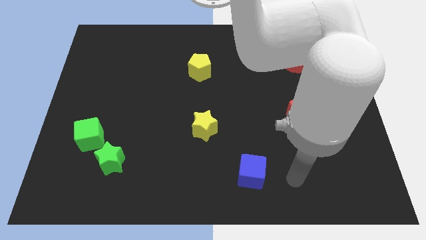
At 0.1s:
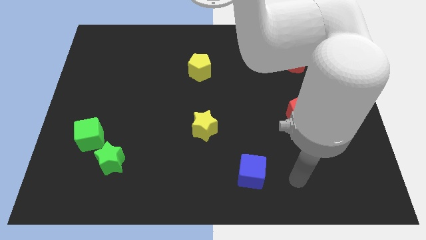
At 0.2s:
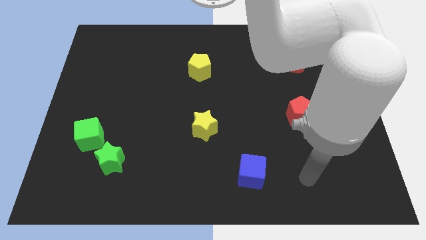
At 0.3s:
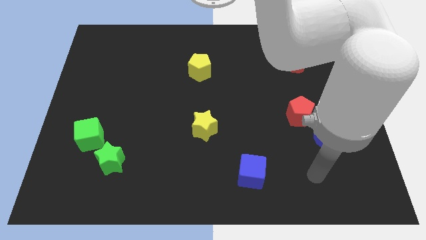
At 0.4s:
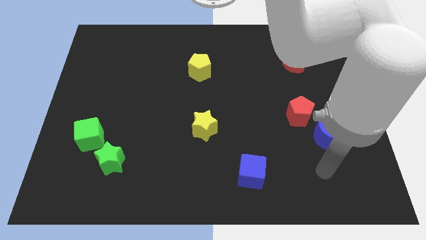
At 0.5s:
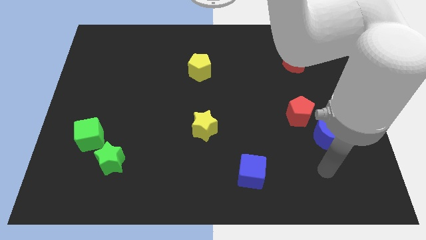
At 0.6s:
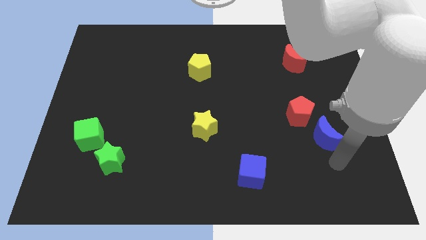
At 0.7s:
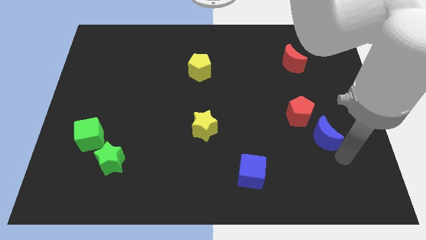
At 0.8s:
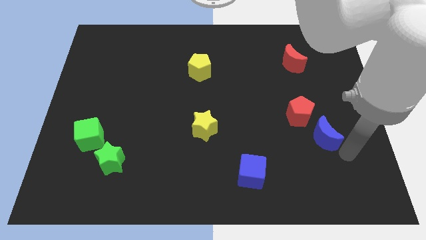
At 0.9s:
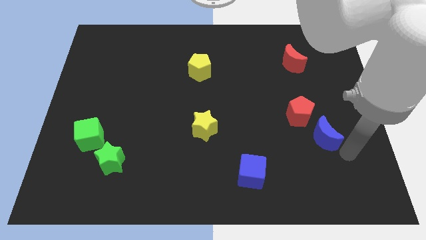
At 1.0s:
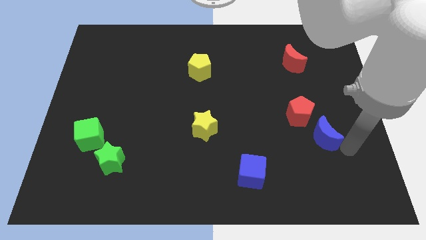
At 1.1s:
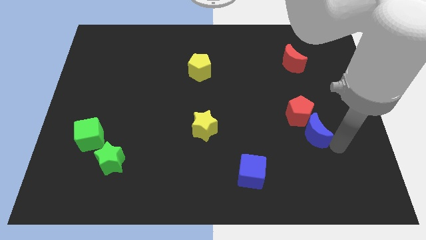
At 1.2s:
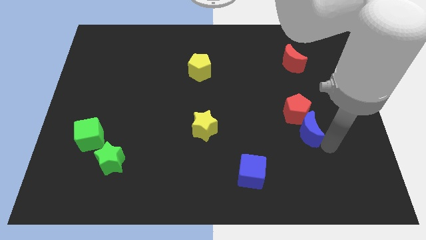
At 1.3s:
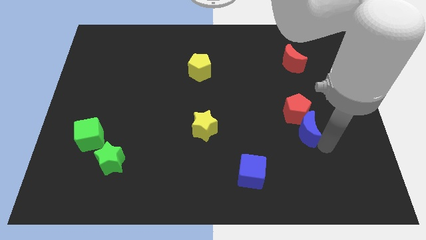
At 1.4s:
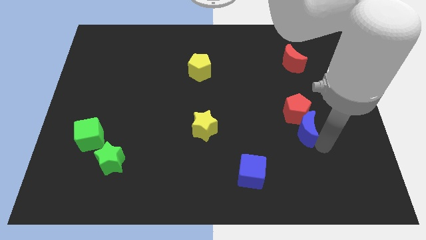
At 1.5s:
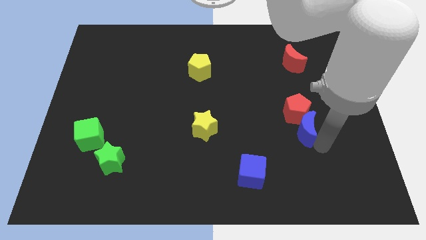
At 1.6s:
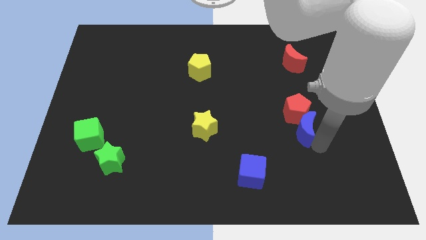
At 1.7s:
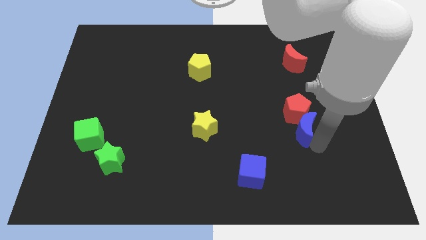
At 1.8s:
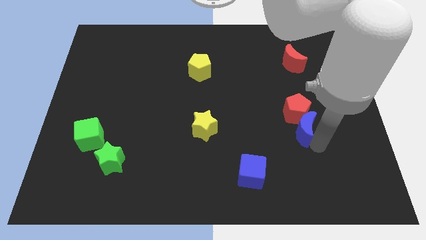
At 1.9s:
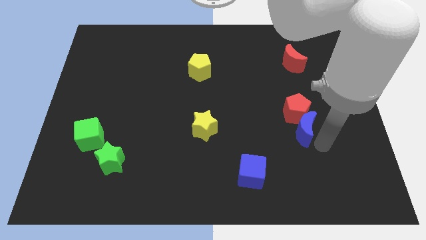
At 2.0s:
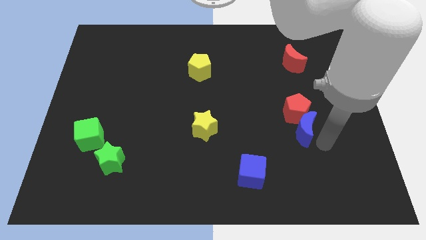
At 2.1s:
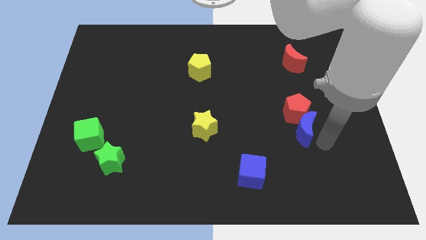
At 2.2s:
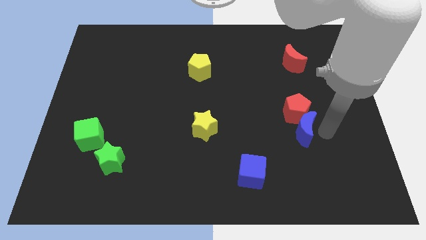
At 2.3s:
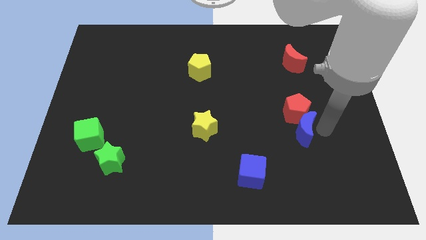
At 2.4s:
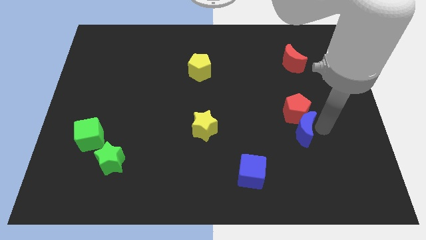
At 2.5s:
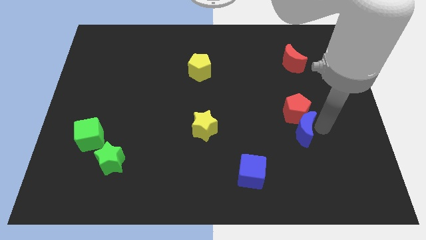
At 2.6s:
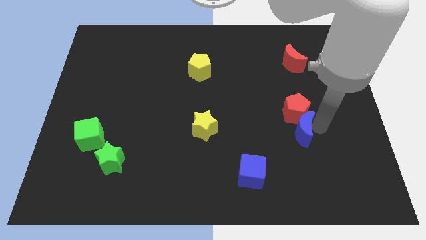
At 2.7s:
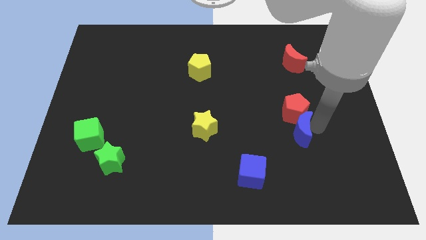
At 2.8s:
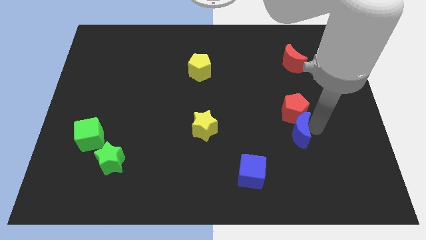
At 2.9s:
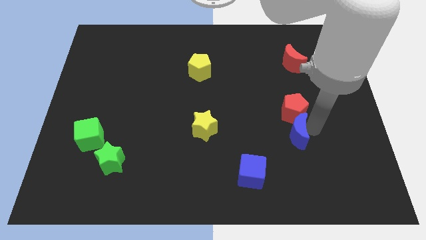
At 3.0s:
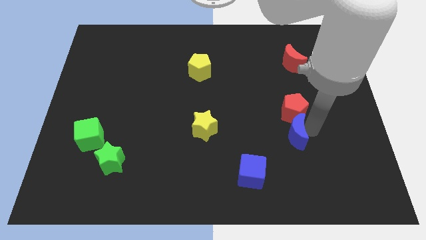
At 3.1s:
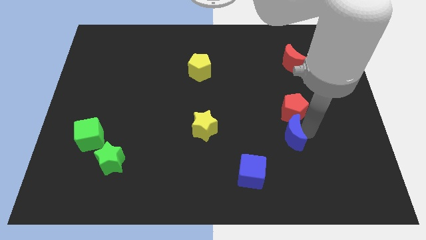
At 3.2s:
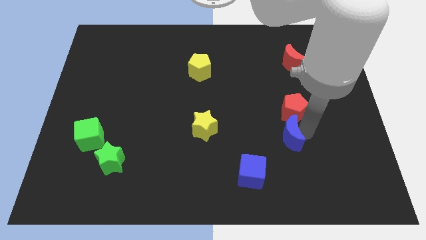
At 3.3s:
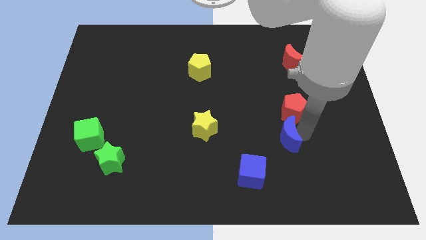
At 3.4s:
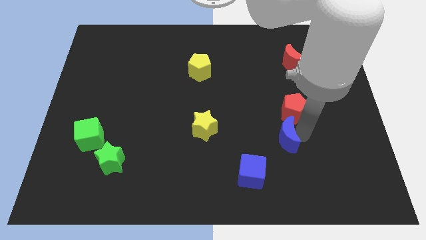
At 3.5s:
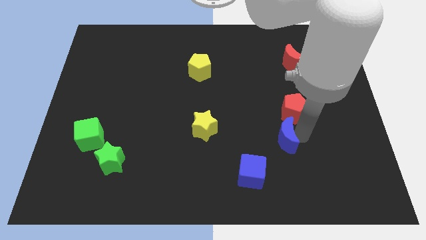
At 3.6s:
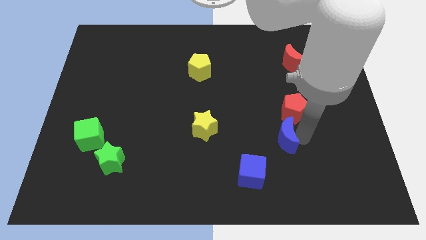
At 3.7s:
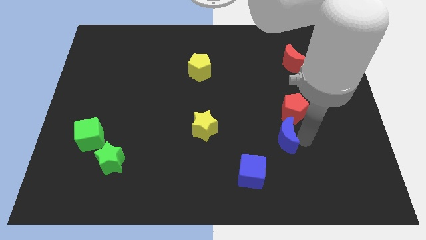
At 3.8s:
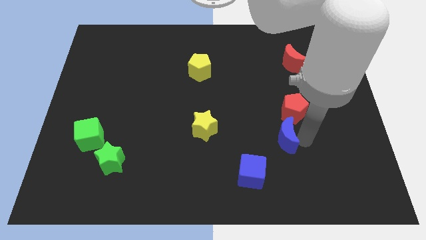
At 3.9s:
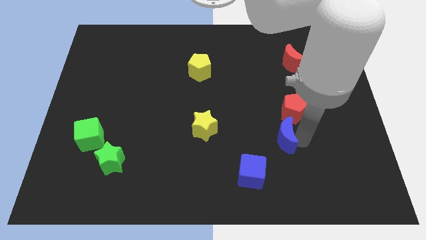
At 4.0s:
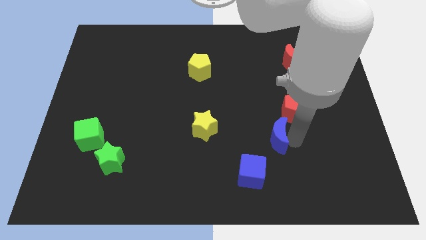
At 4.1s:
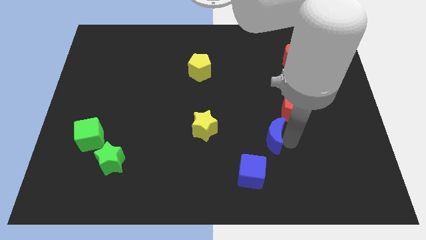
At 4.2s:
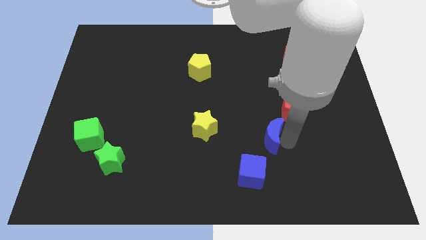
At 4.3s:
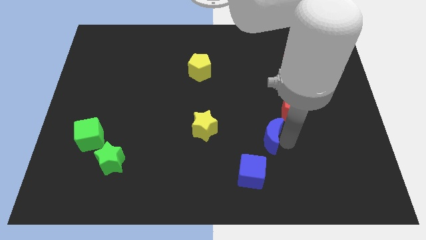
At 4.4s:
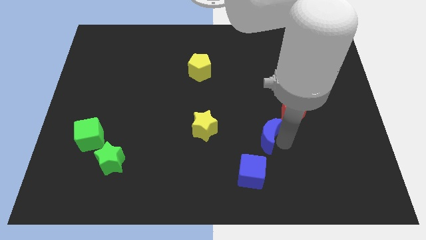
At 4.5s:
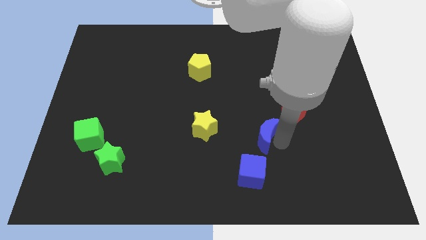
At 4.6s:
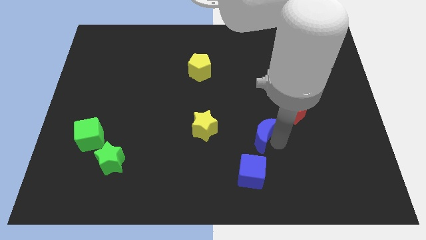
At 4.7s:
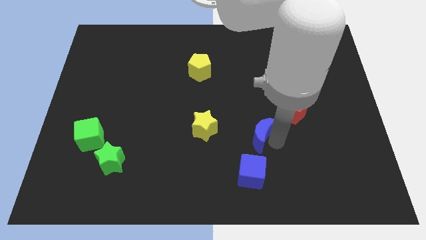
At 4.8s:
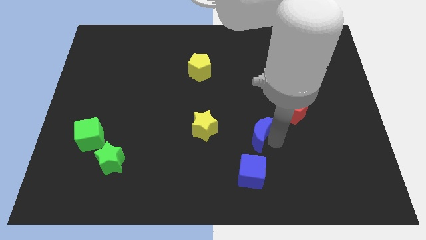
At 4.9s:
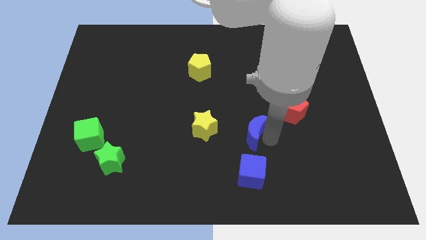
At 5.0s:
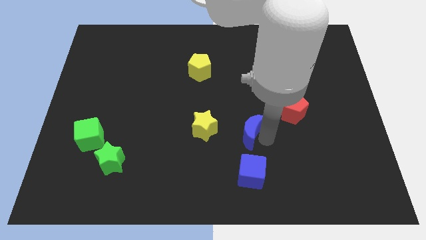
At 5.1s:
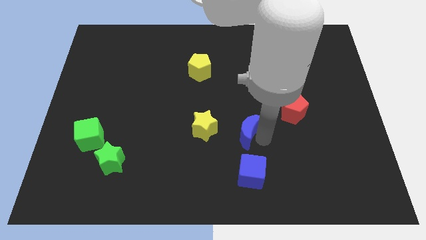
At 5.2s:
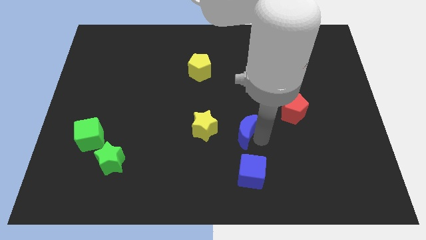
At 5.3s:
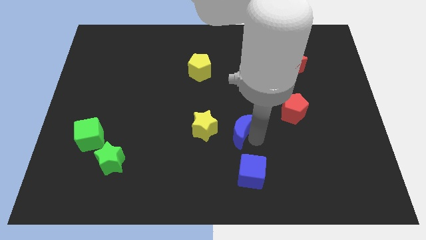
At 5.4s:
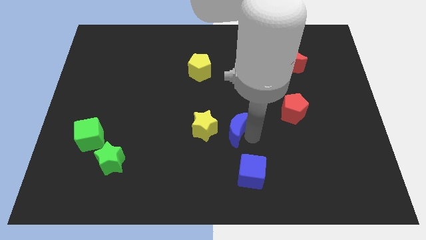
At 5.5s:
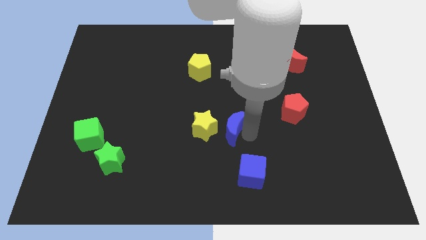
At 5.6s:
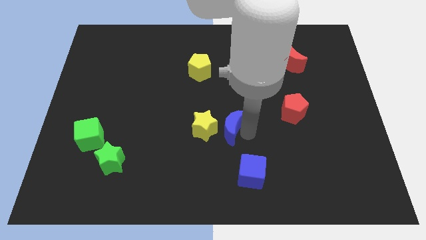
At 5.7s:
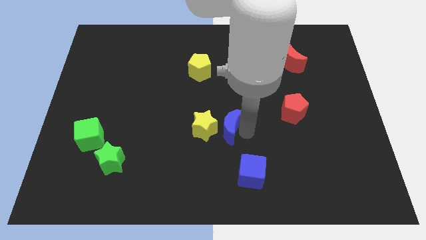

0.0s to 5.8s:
push the blue moon close to the yellow star

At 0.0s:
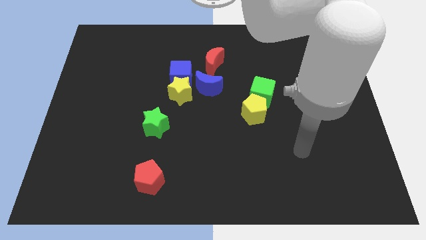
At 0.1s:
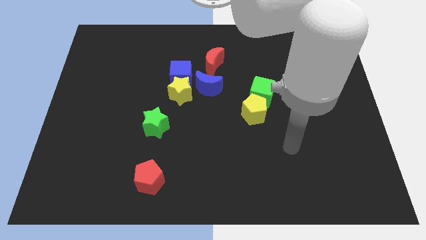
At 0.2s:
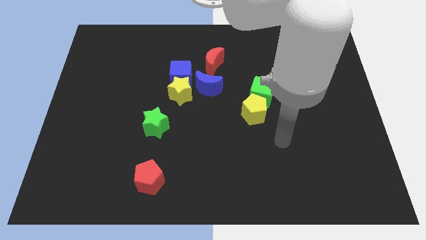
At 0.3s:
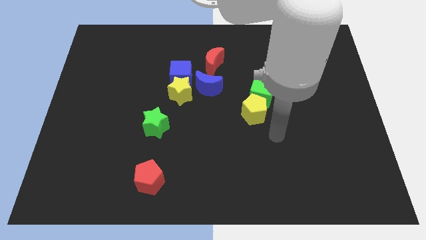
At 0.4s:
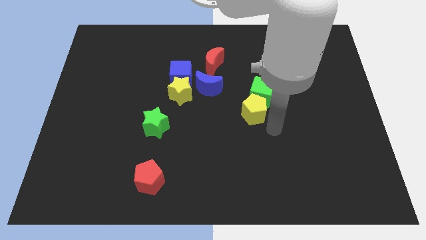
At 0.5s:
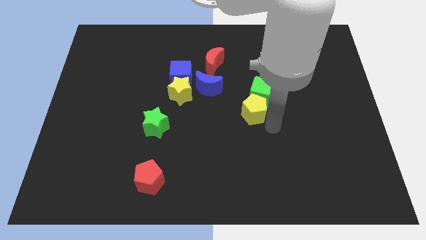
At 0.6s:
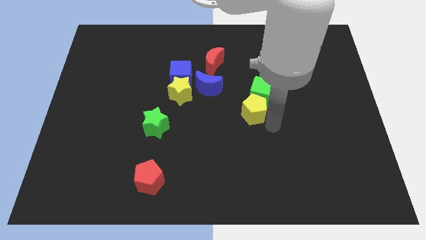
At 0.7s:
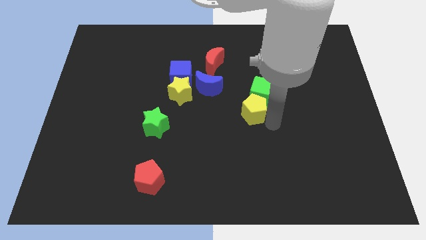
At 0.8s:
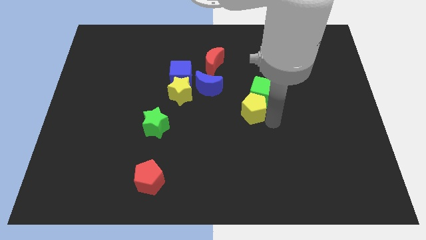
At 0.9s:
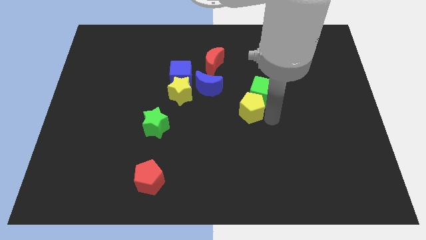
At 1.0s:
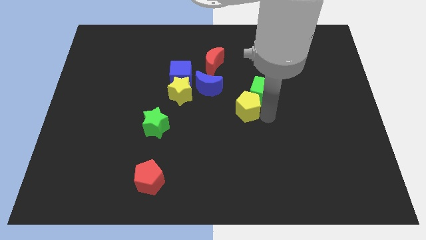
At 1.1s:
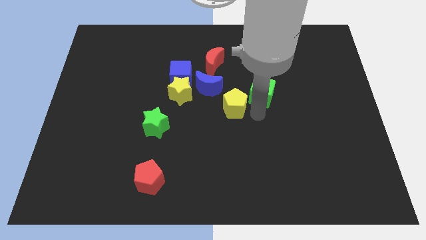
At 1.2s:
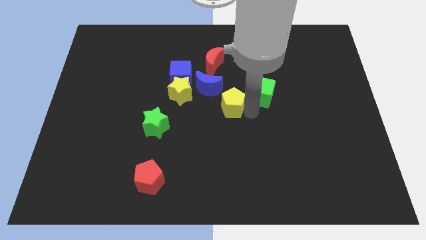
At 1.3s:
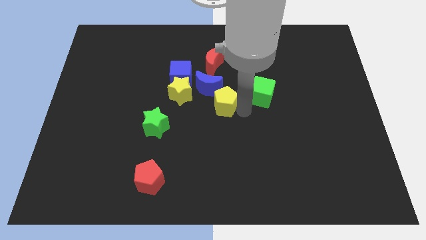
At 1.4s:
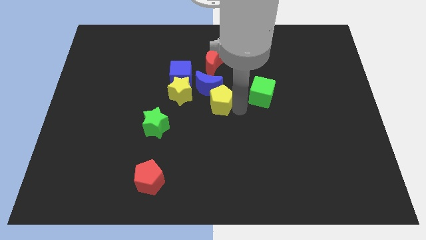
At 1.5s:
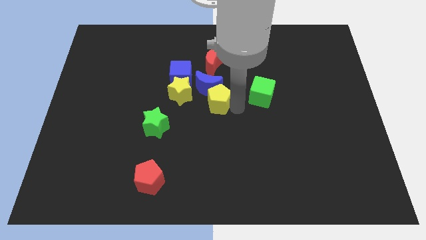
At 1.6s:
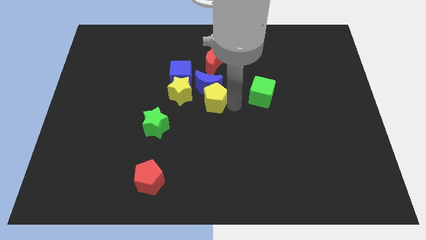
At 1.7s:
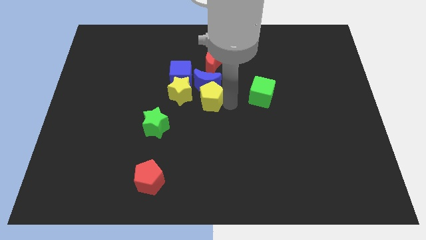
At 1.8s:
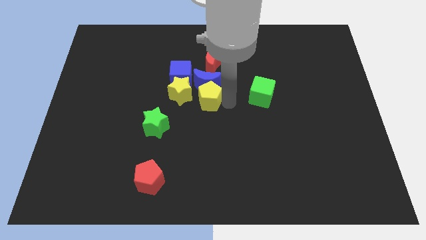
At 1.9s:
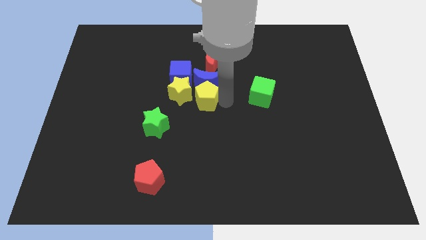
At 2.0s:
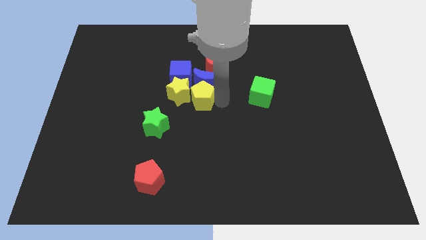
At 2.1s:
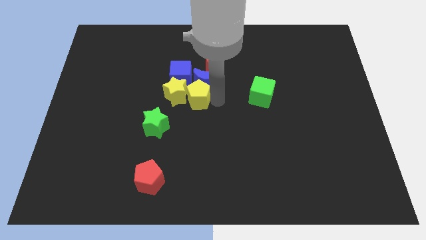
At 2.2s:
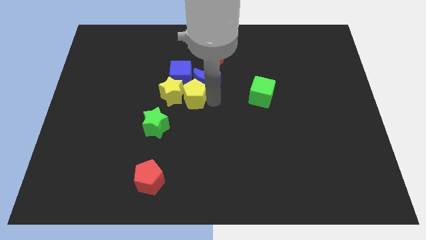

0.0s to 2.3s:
move the yellow pentagon next to the yellow star

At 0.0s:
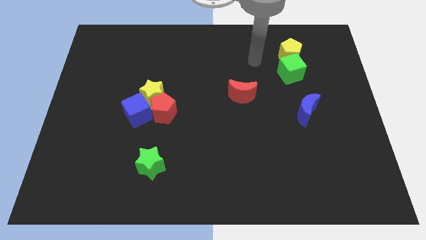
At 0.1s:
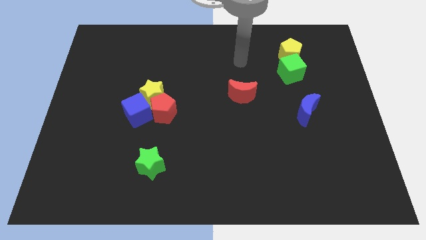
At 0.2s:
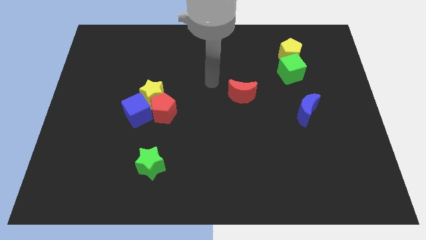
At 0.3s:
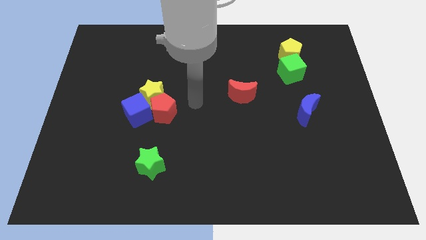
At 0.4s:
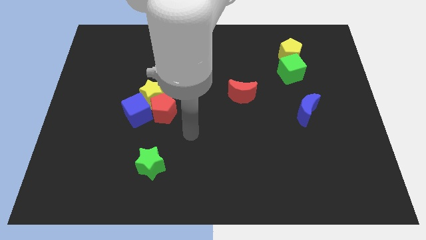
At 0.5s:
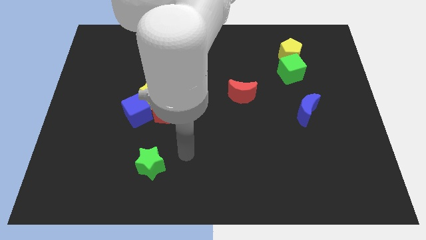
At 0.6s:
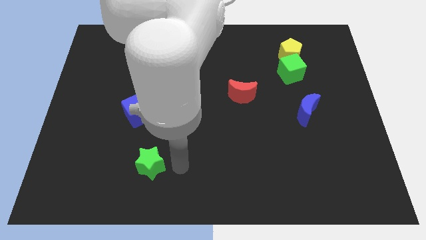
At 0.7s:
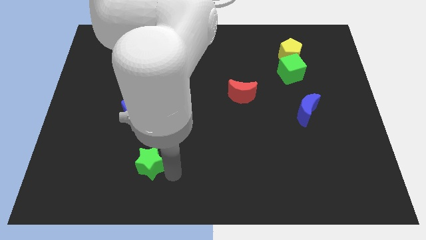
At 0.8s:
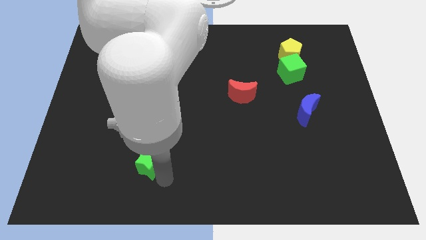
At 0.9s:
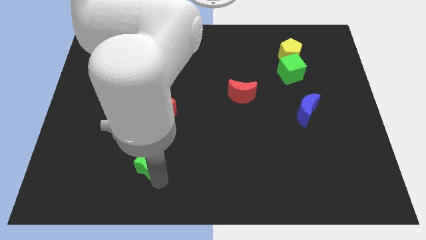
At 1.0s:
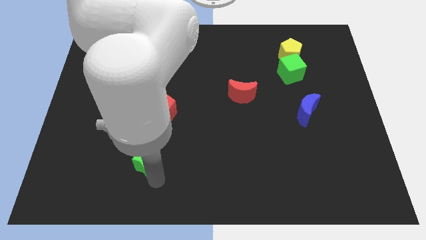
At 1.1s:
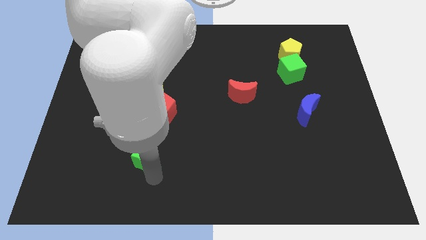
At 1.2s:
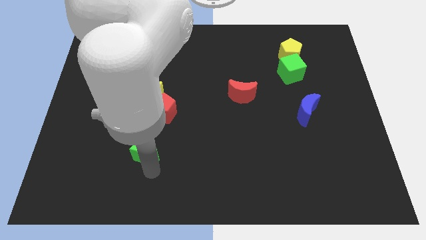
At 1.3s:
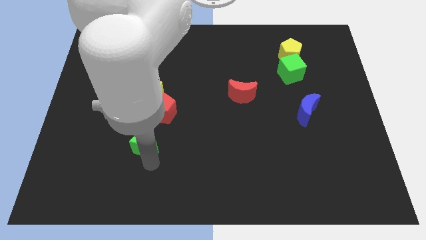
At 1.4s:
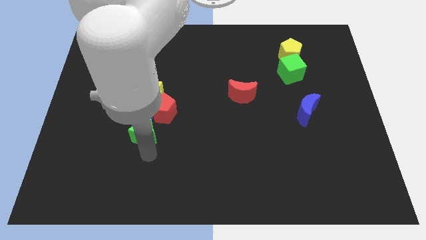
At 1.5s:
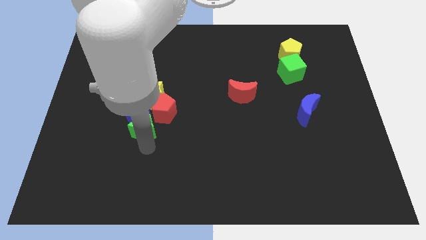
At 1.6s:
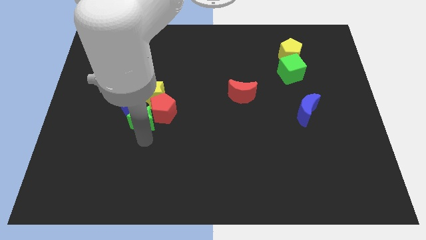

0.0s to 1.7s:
slide the green star next to the blue cube
